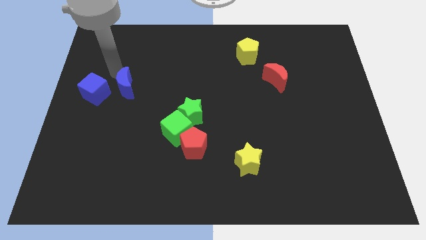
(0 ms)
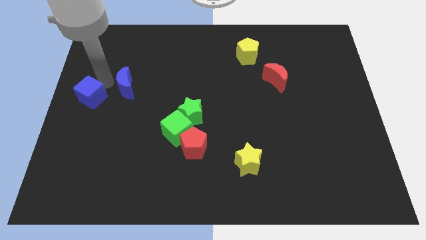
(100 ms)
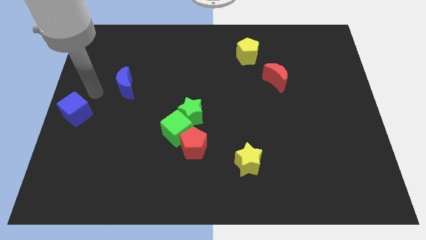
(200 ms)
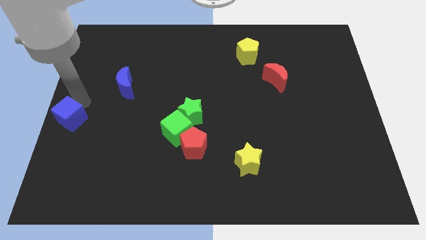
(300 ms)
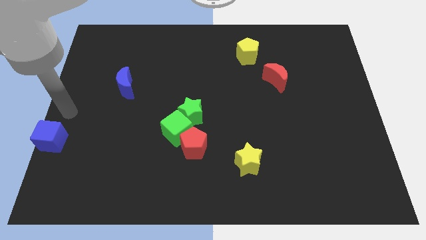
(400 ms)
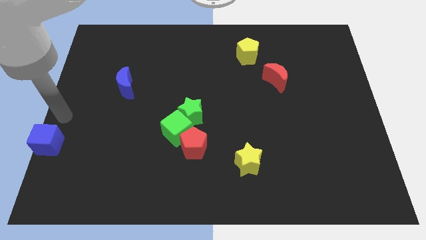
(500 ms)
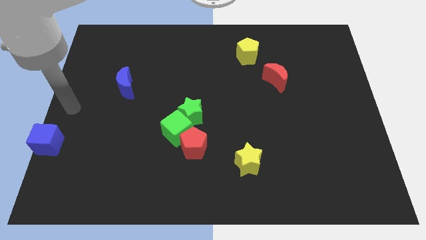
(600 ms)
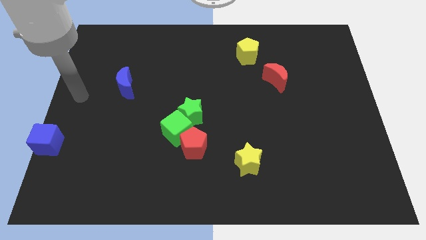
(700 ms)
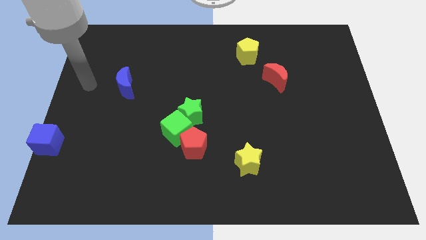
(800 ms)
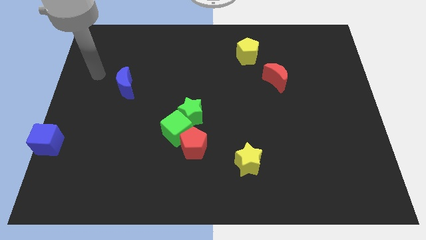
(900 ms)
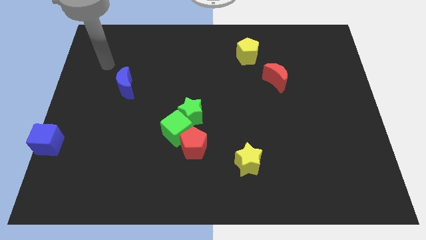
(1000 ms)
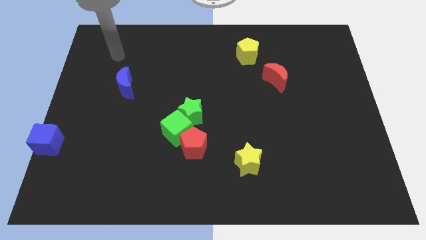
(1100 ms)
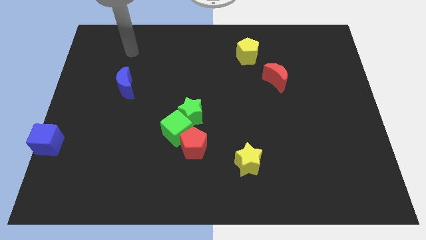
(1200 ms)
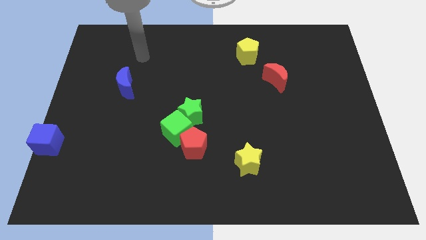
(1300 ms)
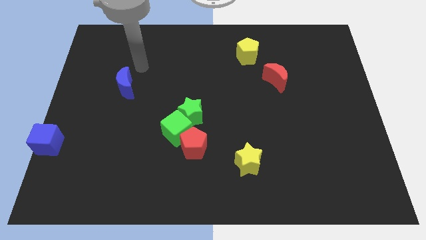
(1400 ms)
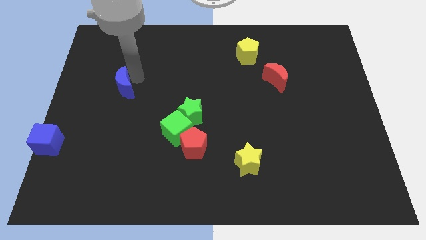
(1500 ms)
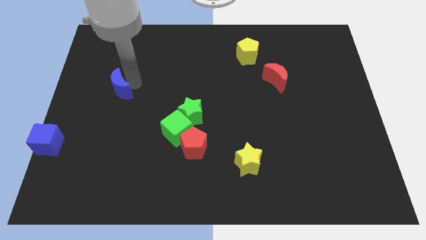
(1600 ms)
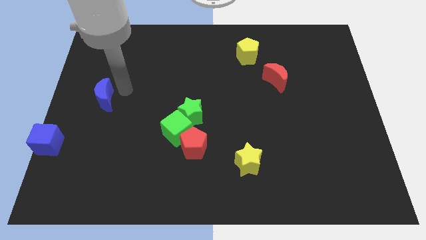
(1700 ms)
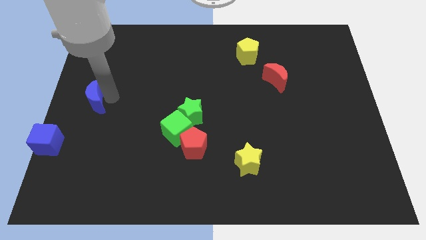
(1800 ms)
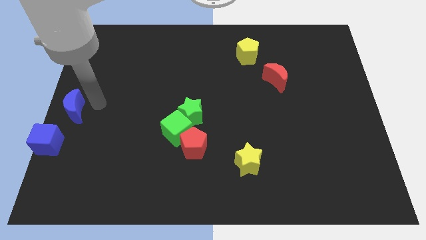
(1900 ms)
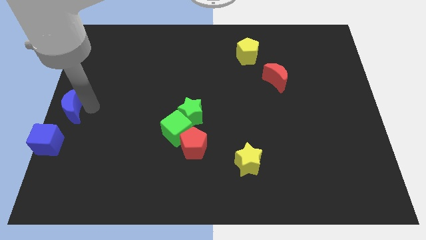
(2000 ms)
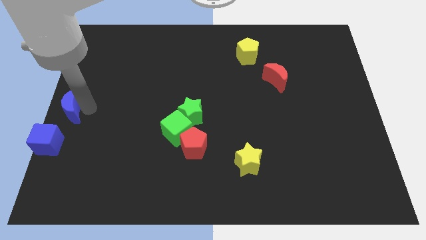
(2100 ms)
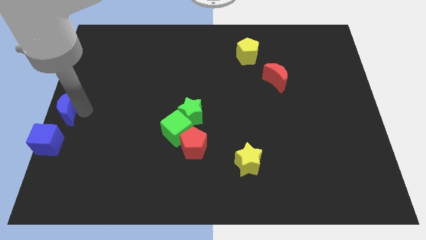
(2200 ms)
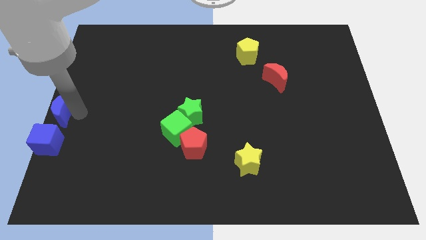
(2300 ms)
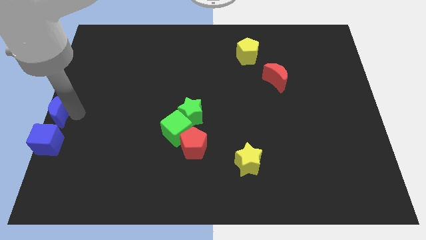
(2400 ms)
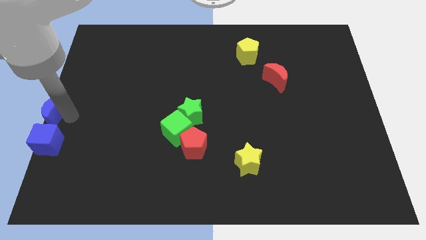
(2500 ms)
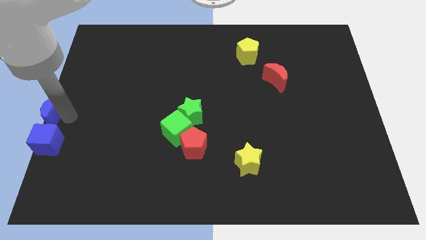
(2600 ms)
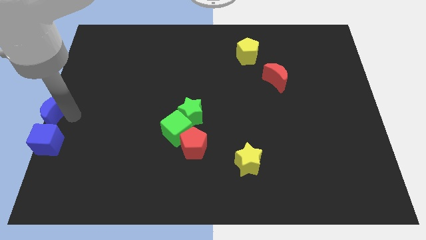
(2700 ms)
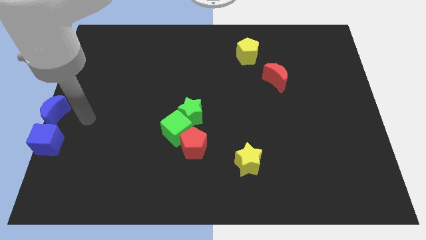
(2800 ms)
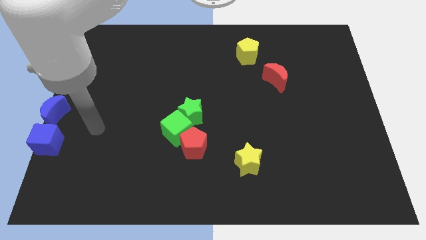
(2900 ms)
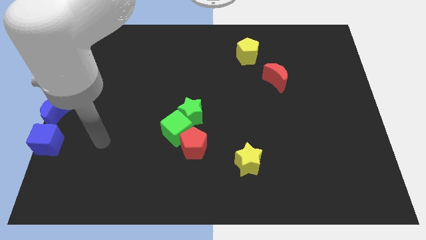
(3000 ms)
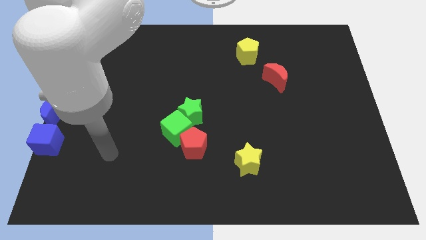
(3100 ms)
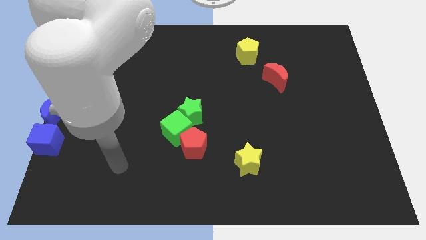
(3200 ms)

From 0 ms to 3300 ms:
move the blue moon above the blue cube

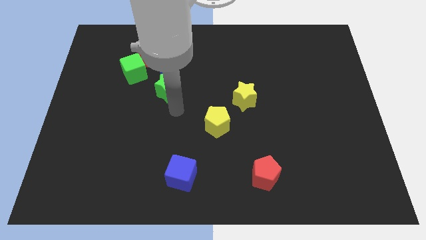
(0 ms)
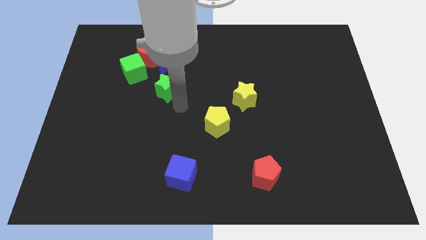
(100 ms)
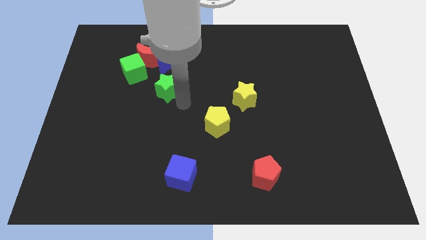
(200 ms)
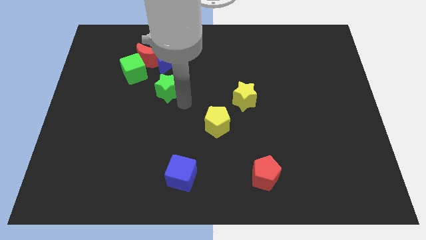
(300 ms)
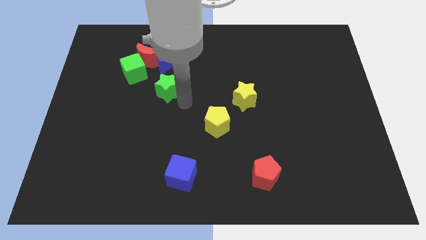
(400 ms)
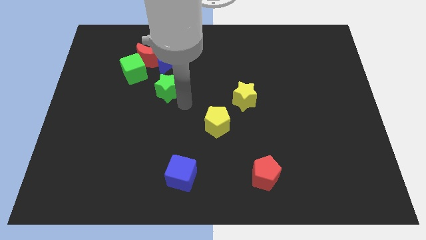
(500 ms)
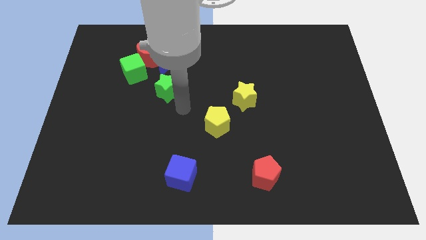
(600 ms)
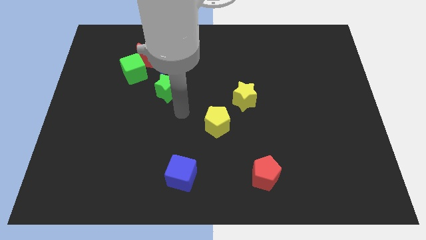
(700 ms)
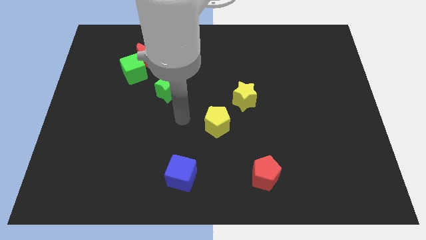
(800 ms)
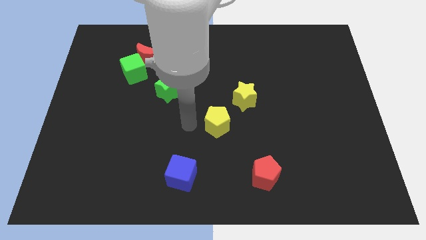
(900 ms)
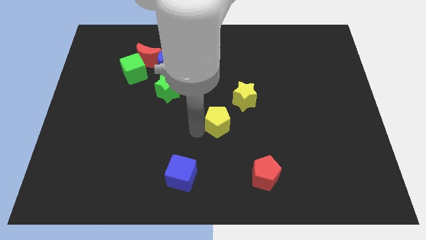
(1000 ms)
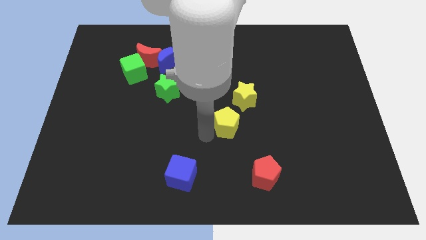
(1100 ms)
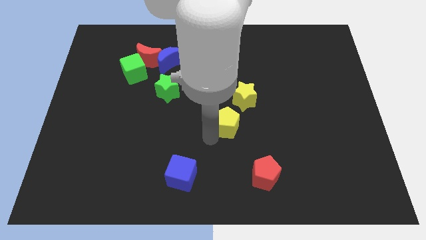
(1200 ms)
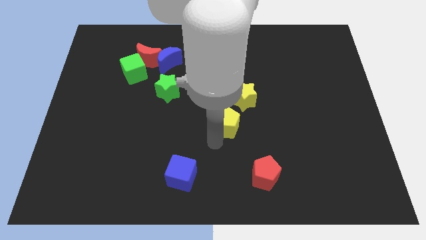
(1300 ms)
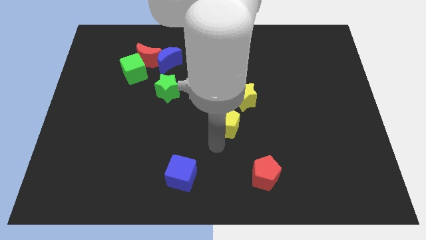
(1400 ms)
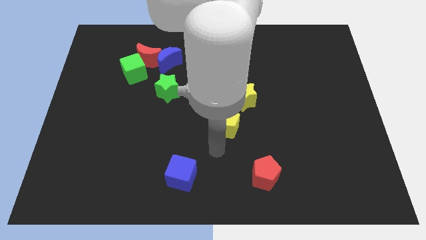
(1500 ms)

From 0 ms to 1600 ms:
push yellow pentagon towards yellow star

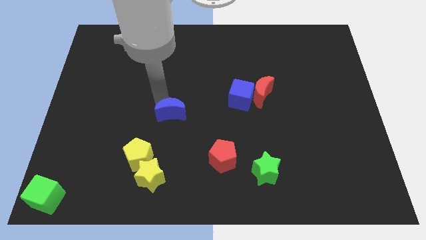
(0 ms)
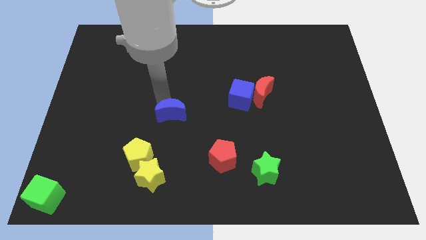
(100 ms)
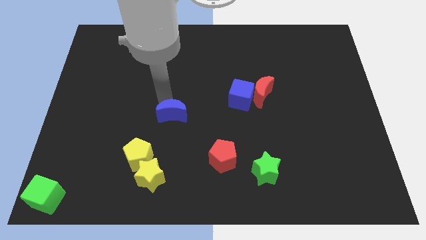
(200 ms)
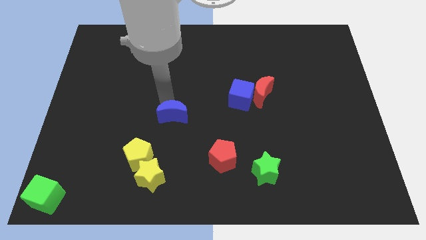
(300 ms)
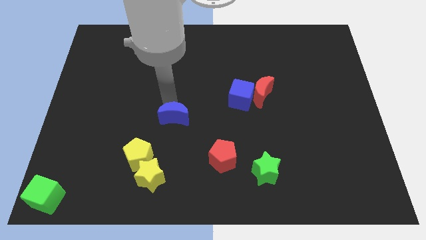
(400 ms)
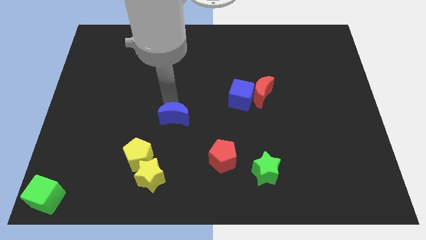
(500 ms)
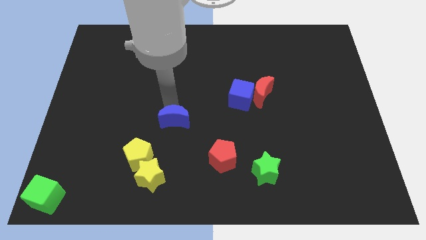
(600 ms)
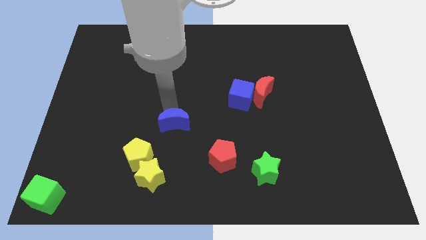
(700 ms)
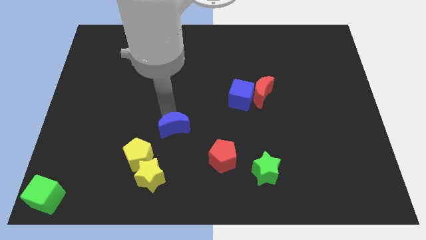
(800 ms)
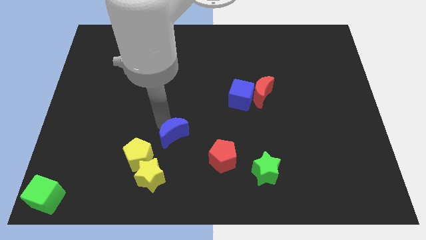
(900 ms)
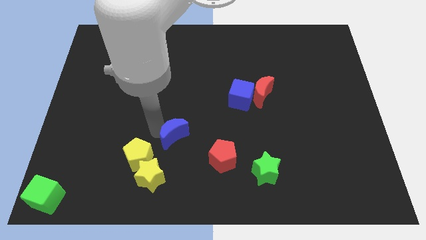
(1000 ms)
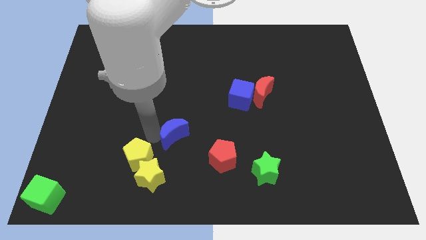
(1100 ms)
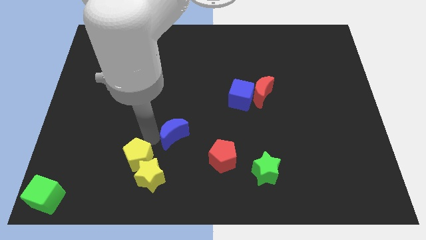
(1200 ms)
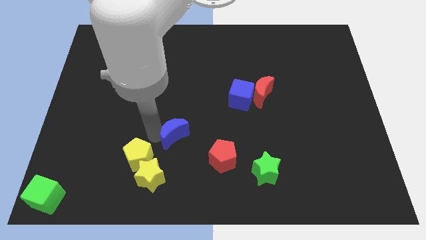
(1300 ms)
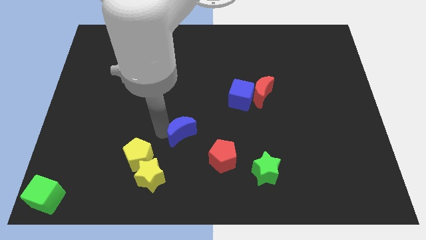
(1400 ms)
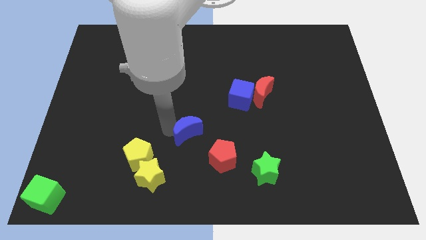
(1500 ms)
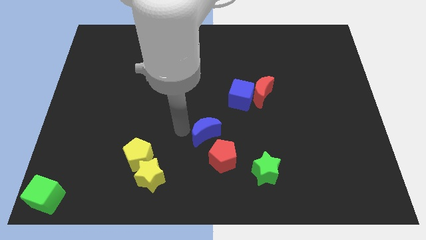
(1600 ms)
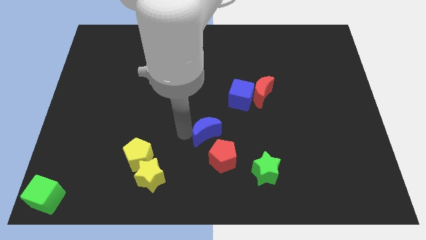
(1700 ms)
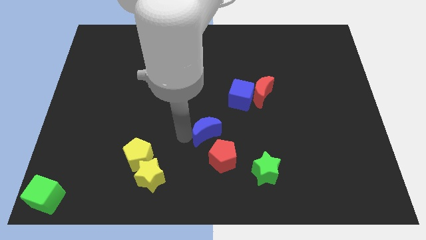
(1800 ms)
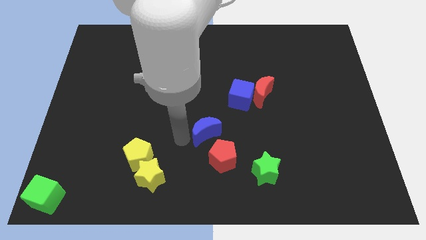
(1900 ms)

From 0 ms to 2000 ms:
slide the blue crescent slightly towards the red pentagon

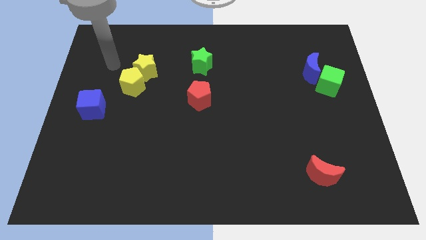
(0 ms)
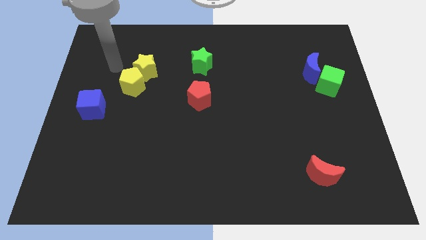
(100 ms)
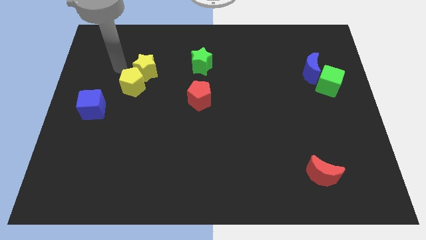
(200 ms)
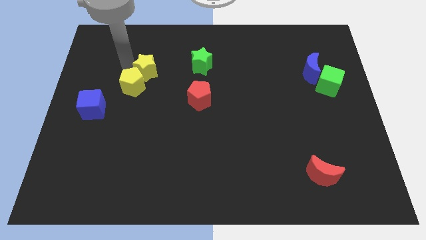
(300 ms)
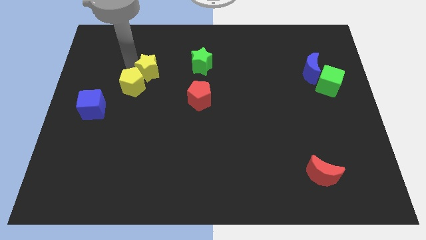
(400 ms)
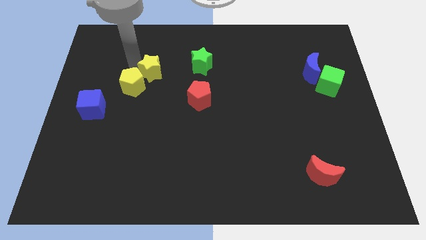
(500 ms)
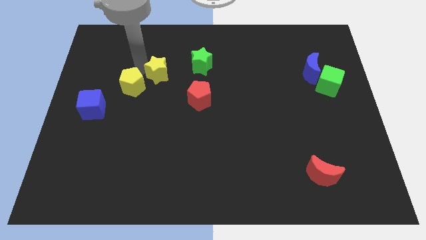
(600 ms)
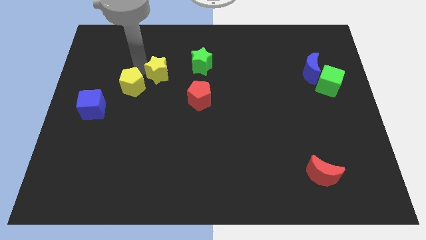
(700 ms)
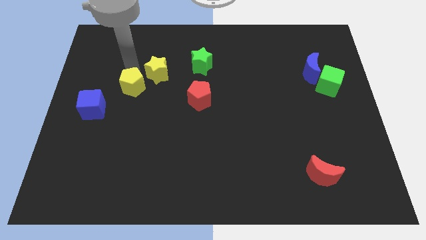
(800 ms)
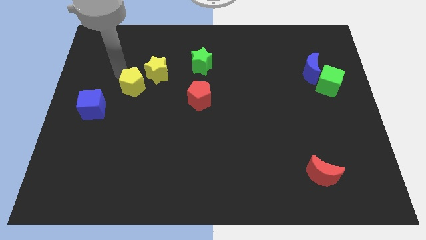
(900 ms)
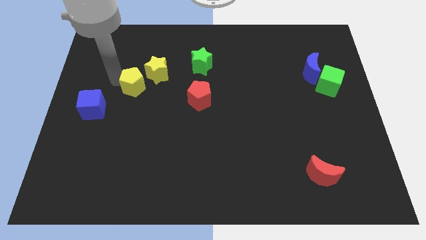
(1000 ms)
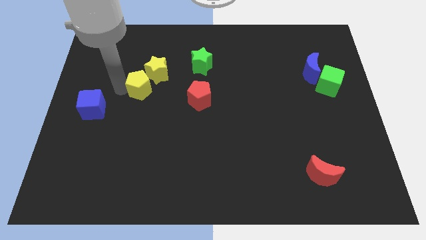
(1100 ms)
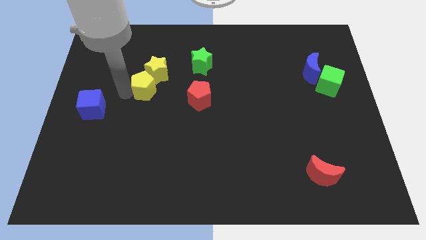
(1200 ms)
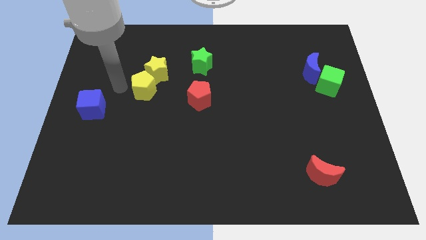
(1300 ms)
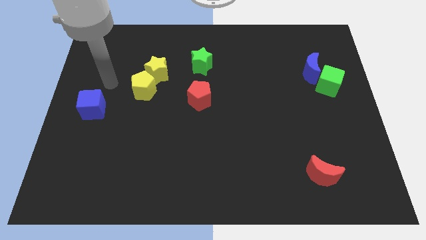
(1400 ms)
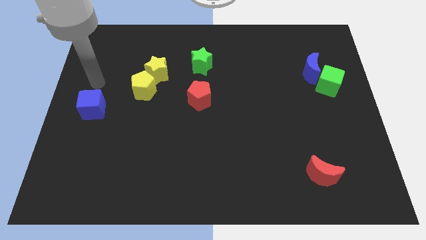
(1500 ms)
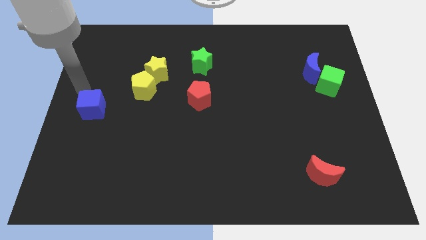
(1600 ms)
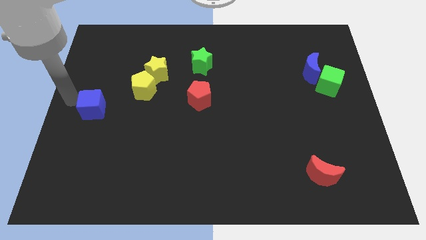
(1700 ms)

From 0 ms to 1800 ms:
push the yellow blocks diagonally left to the red pentagon

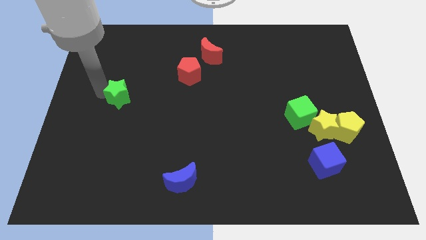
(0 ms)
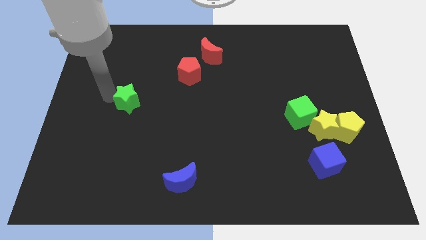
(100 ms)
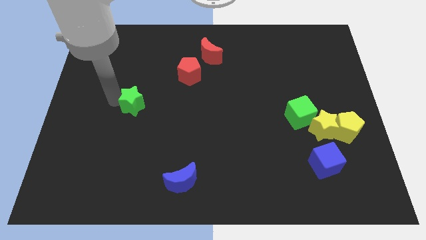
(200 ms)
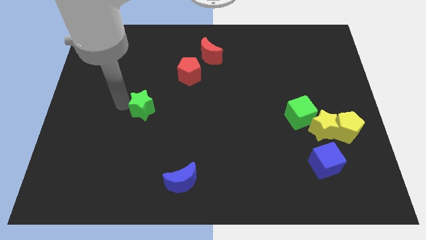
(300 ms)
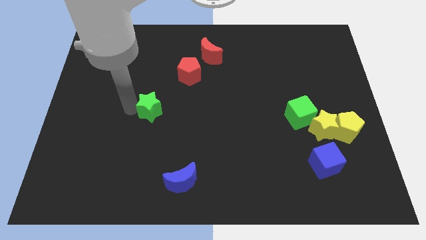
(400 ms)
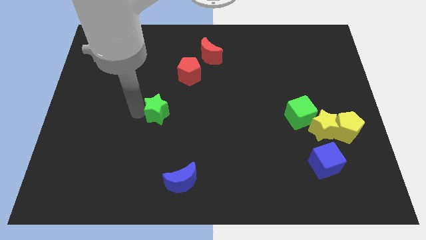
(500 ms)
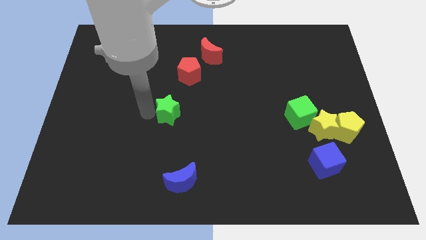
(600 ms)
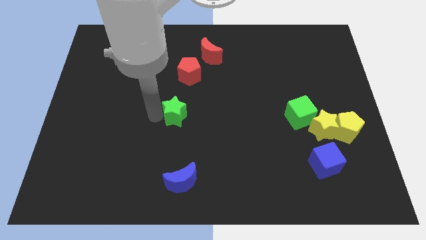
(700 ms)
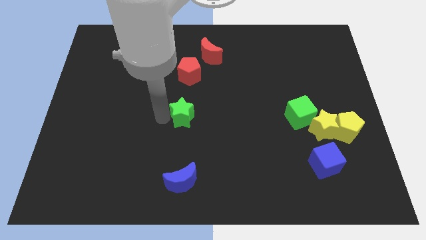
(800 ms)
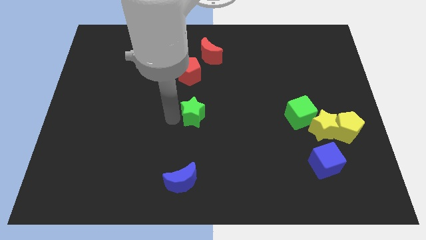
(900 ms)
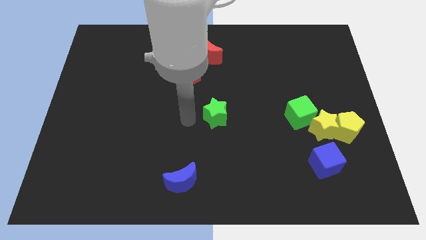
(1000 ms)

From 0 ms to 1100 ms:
place green star to the bottom of red pentagon
